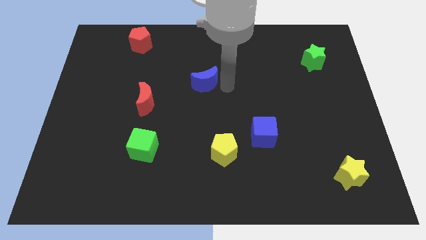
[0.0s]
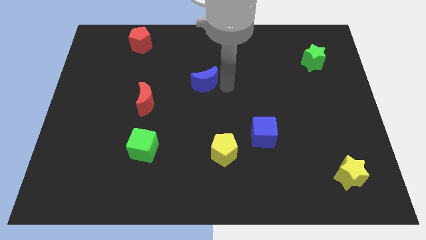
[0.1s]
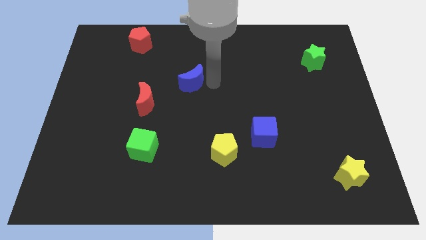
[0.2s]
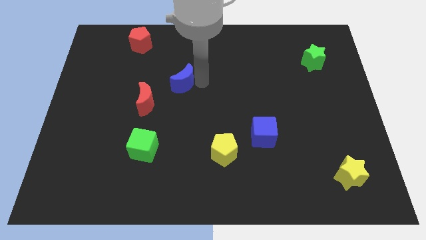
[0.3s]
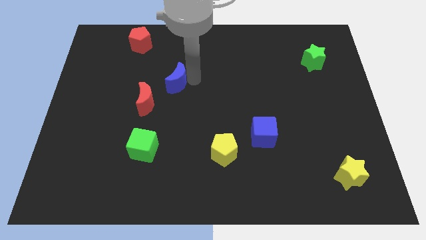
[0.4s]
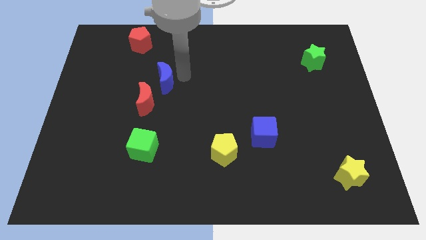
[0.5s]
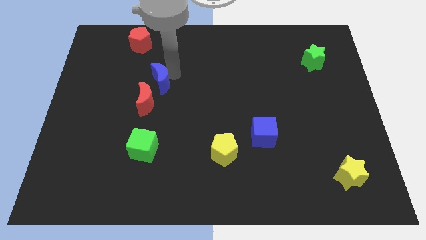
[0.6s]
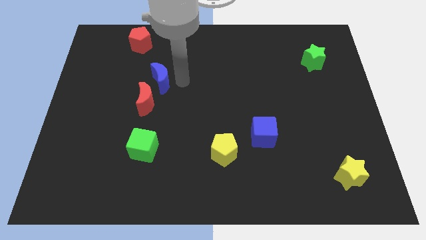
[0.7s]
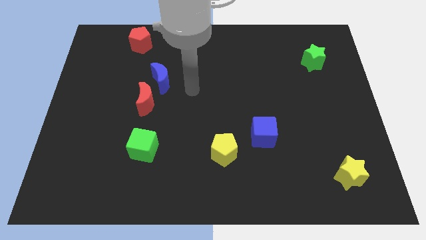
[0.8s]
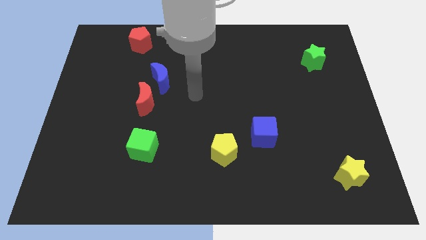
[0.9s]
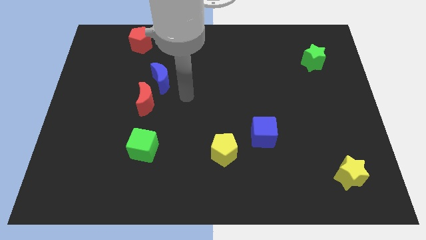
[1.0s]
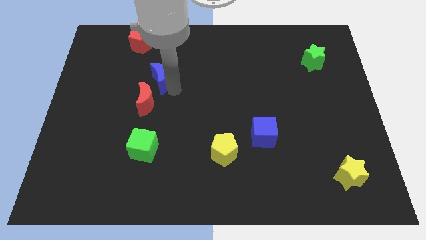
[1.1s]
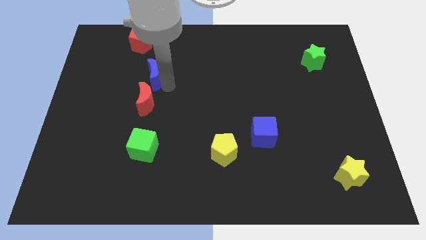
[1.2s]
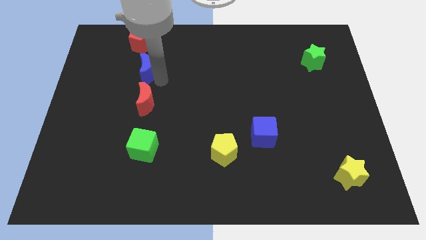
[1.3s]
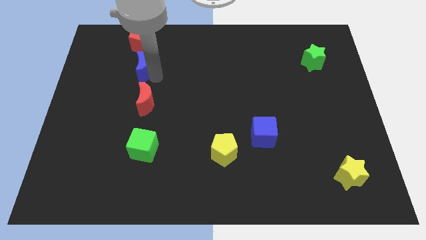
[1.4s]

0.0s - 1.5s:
place the blue moon between red moon and red pentagon

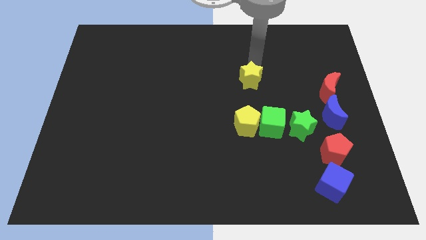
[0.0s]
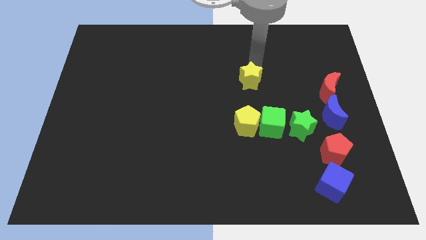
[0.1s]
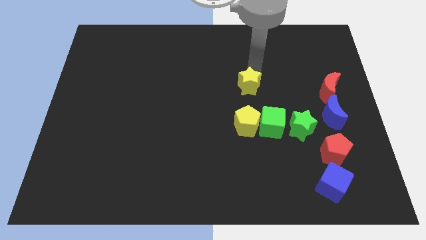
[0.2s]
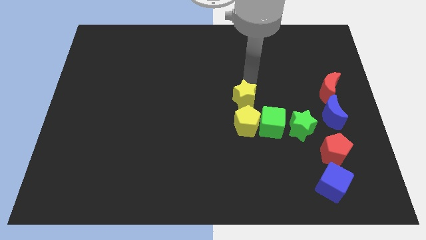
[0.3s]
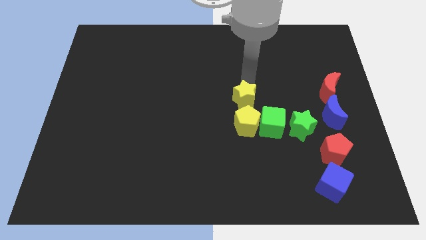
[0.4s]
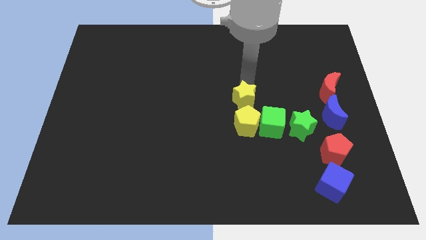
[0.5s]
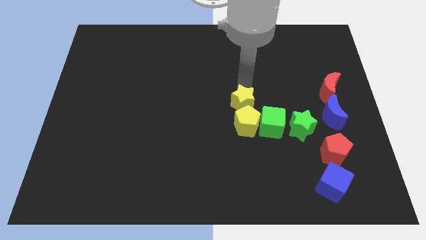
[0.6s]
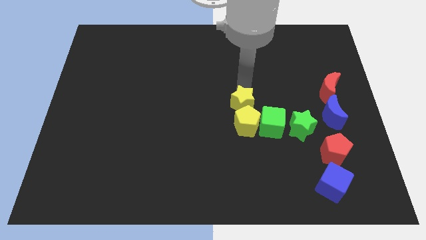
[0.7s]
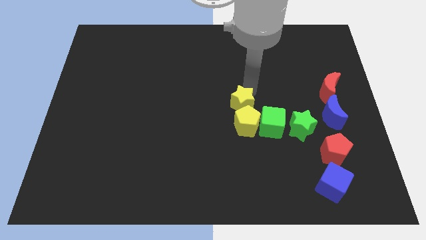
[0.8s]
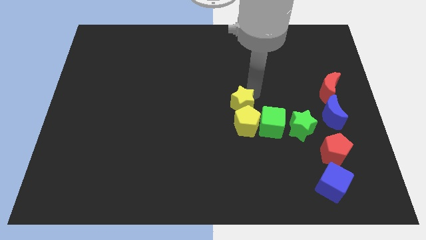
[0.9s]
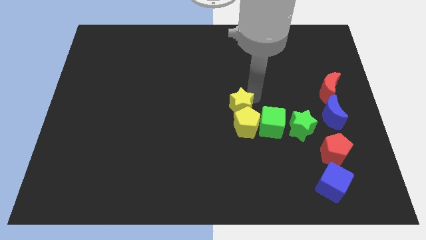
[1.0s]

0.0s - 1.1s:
move the yellow star into the yellow pentagon

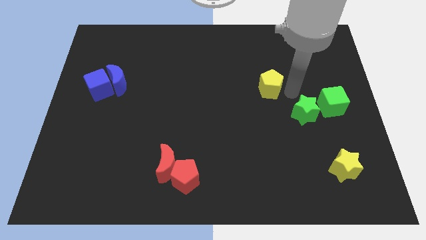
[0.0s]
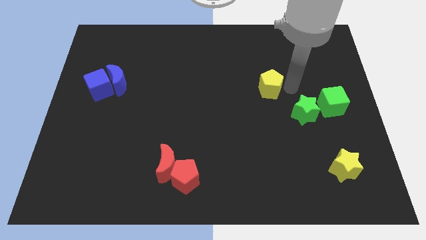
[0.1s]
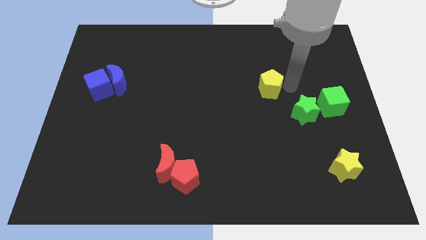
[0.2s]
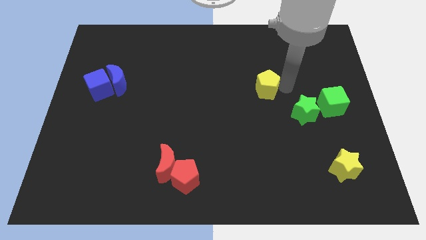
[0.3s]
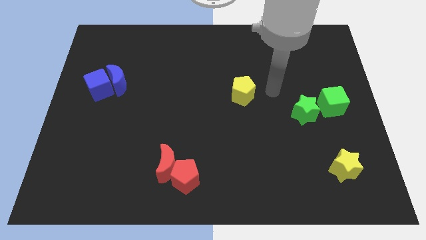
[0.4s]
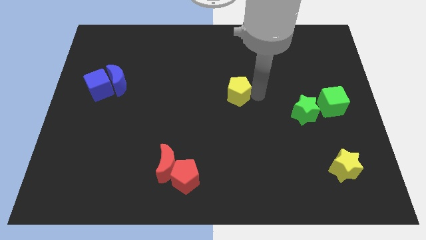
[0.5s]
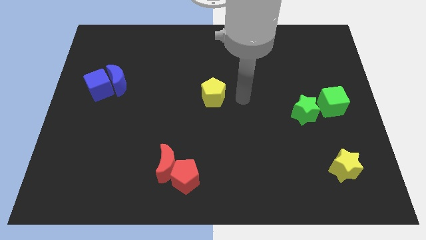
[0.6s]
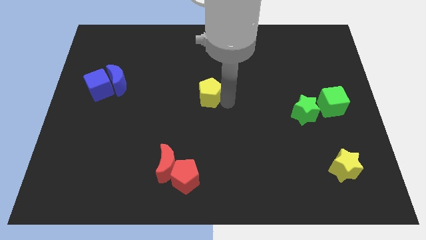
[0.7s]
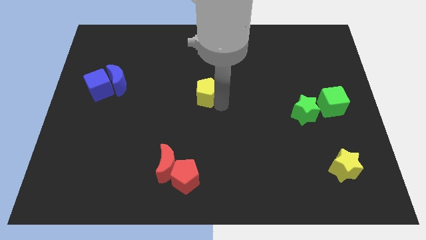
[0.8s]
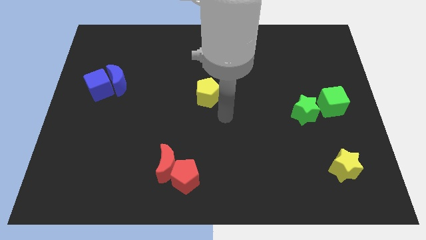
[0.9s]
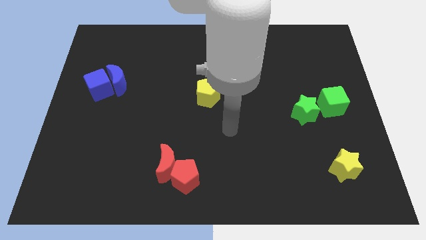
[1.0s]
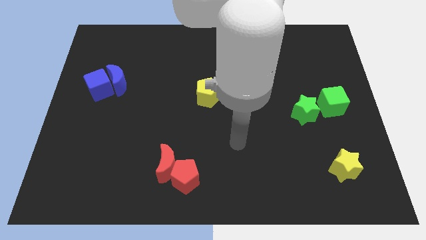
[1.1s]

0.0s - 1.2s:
push the yellow block to the center of the board

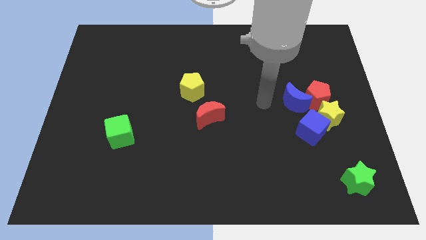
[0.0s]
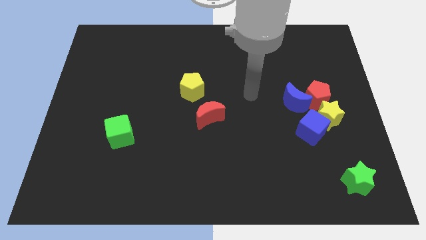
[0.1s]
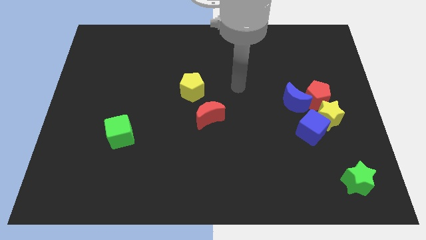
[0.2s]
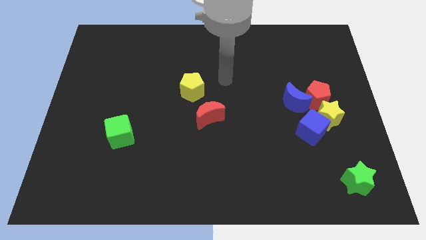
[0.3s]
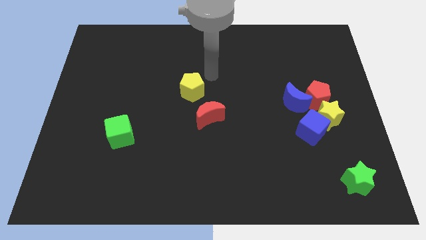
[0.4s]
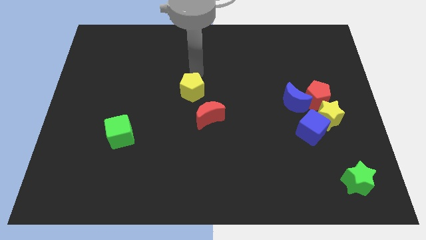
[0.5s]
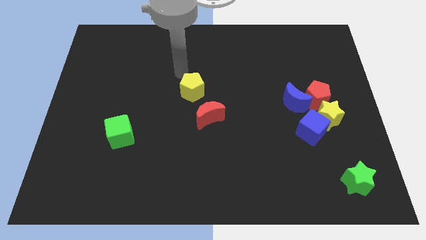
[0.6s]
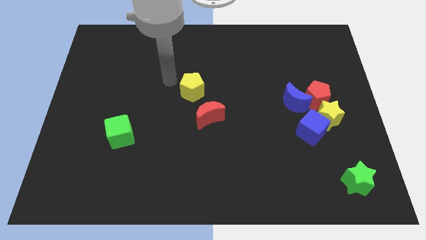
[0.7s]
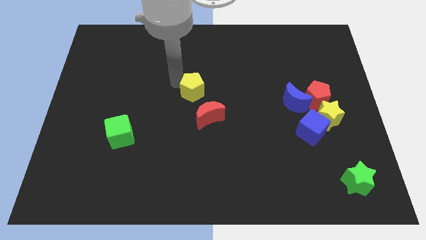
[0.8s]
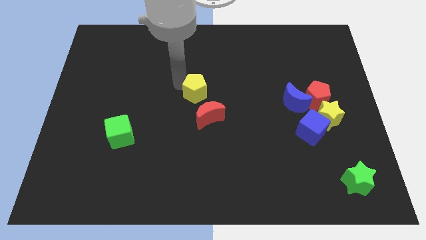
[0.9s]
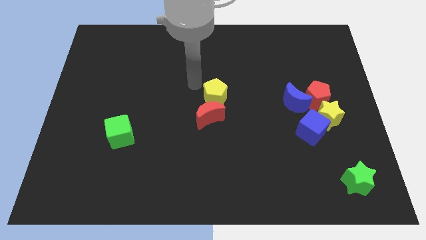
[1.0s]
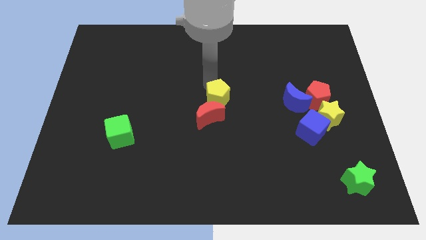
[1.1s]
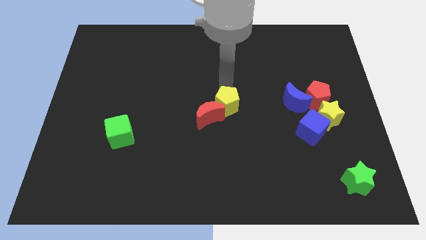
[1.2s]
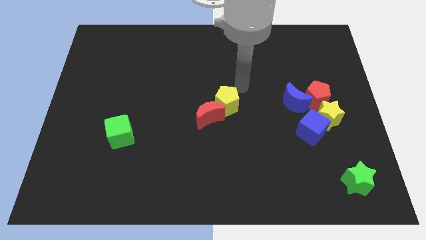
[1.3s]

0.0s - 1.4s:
move the yellow pentagon to the left of the blue crescent

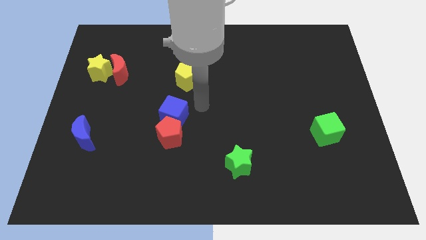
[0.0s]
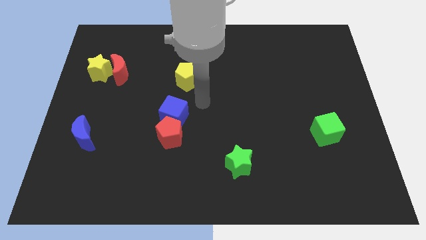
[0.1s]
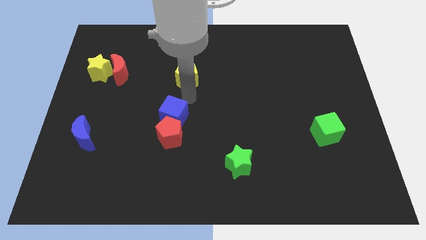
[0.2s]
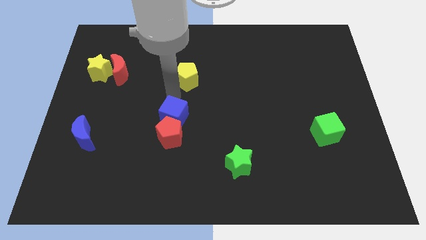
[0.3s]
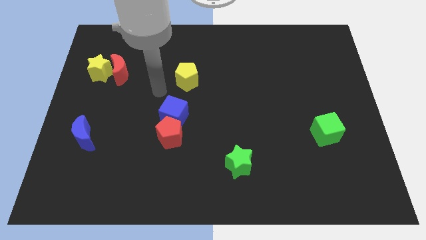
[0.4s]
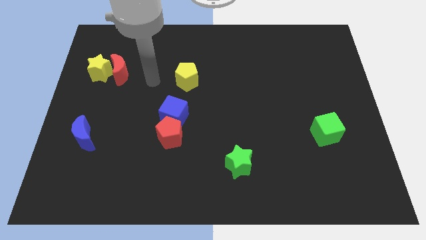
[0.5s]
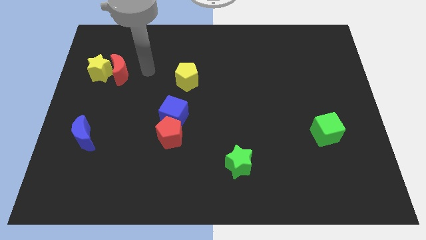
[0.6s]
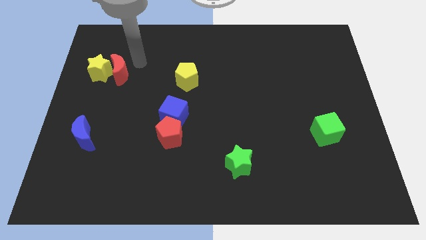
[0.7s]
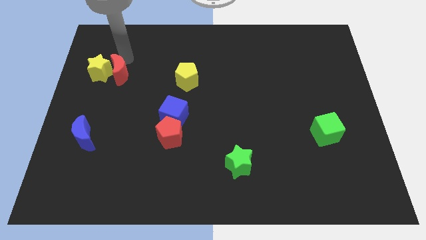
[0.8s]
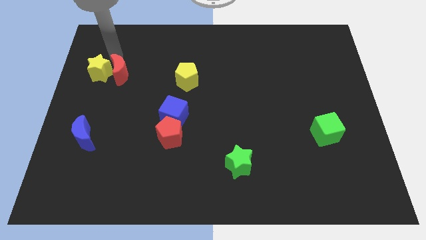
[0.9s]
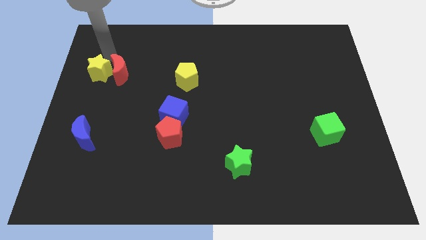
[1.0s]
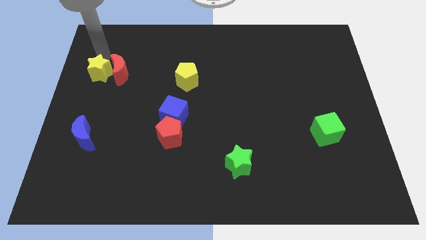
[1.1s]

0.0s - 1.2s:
move your arm to the top left of the board

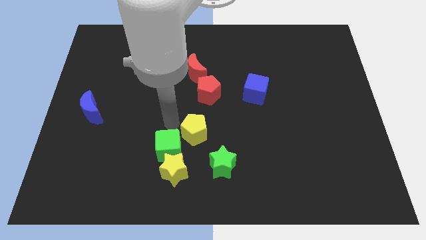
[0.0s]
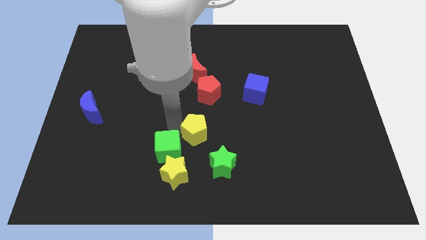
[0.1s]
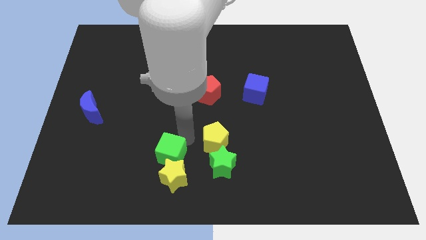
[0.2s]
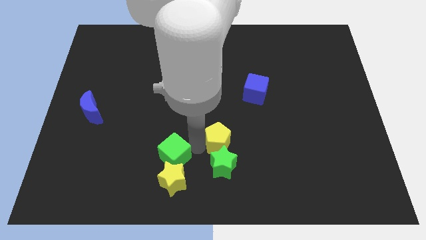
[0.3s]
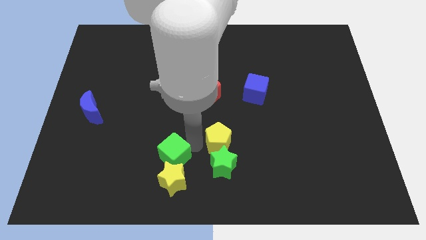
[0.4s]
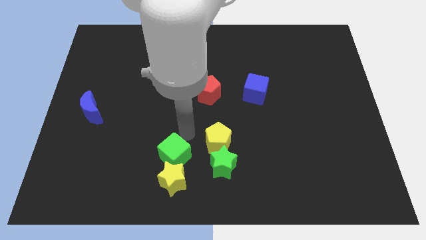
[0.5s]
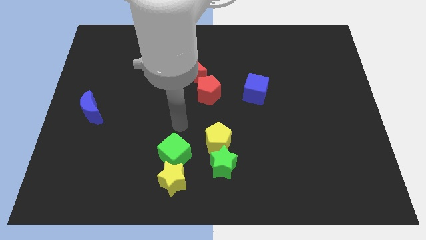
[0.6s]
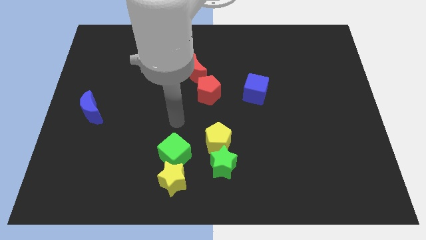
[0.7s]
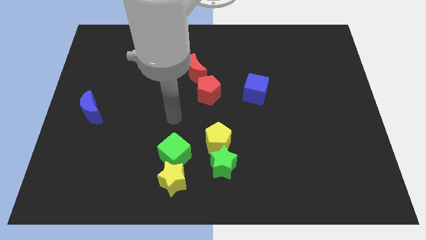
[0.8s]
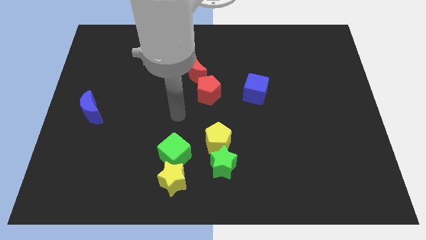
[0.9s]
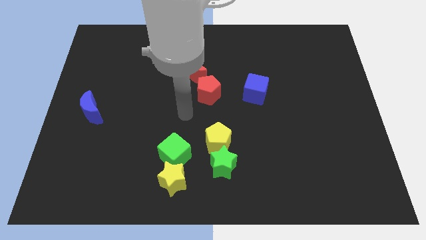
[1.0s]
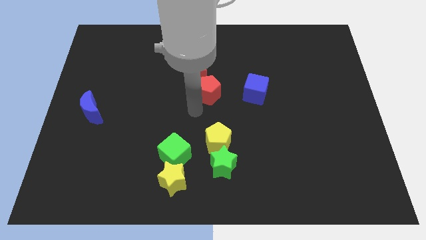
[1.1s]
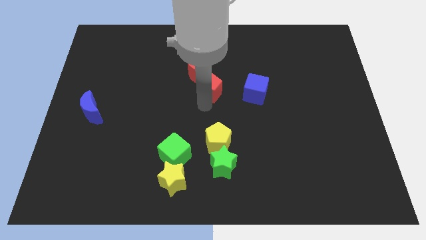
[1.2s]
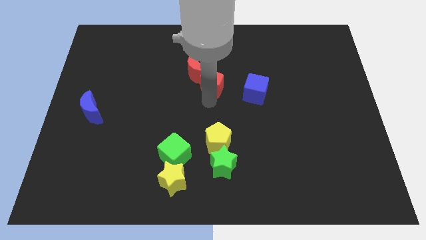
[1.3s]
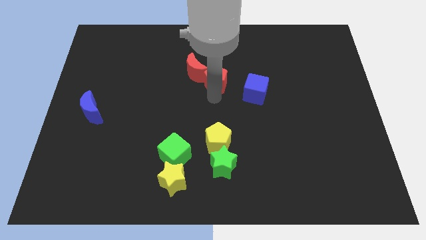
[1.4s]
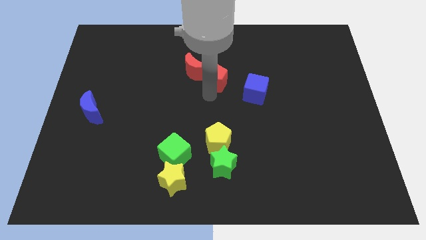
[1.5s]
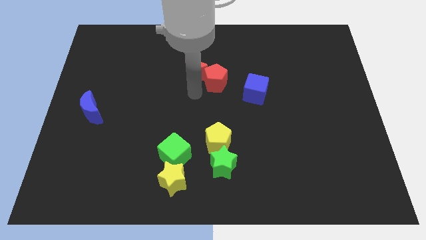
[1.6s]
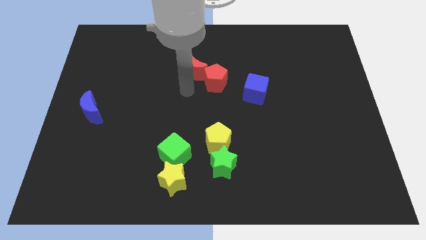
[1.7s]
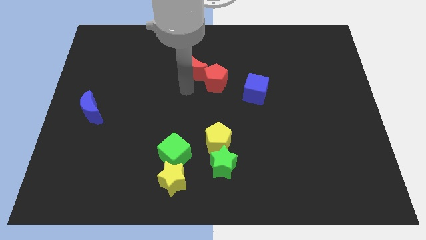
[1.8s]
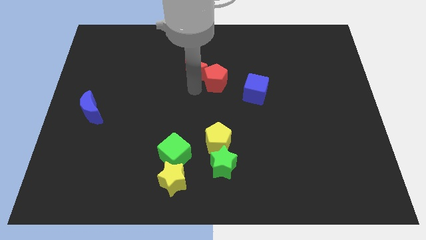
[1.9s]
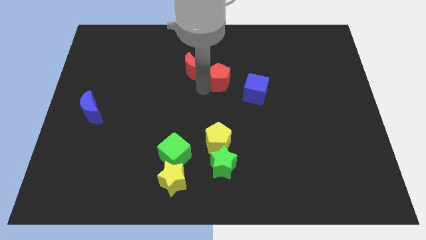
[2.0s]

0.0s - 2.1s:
separate green cube and yellow pentagon

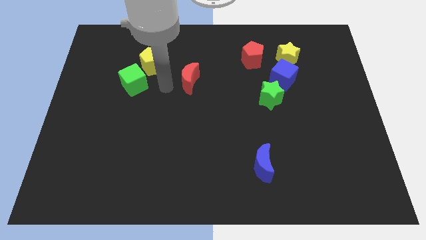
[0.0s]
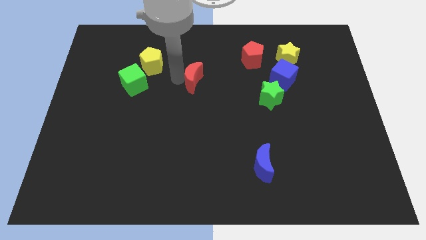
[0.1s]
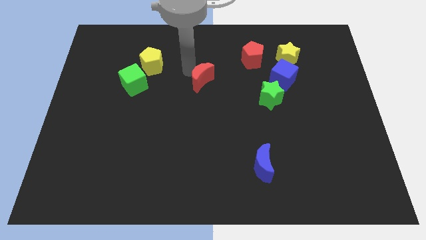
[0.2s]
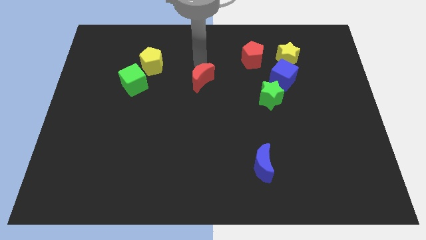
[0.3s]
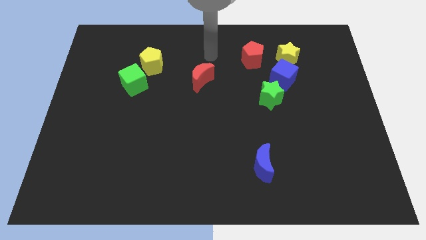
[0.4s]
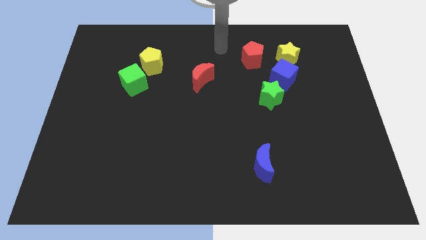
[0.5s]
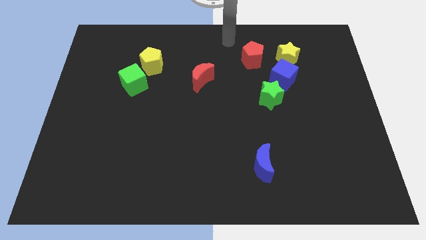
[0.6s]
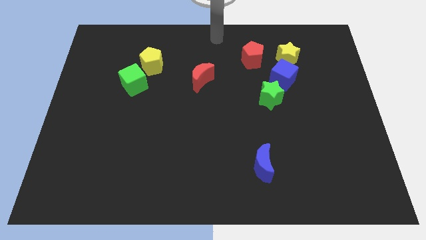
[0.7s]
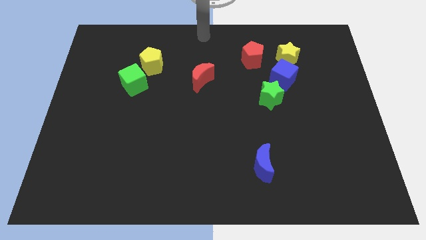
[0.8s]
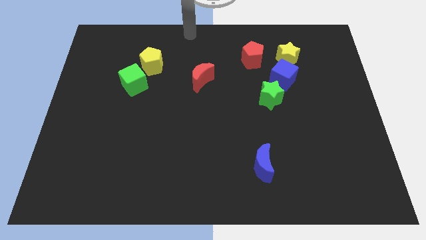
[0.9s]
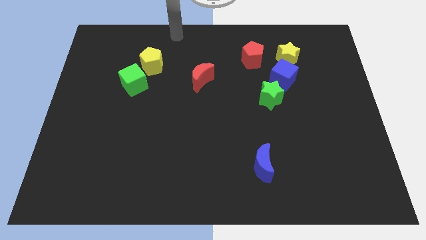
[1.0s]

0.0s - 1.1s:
place the red crescent towards the bottom left side of the red pentagon
